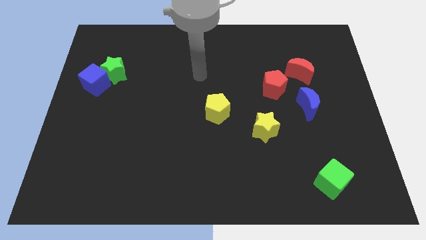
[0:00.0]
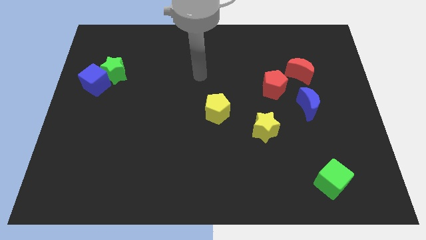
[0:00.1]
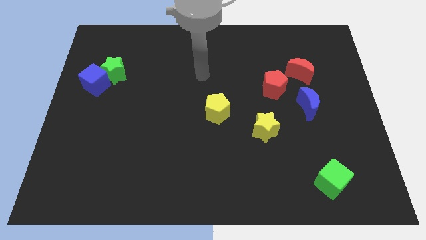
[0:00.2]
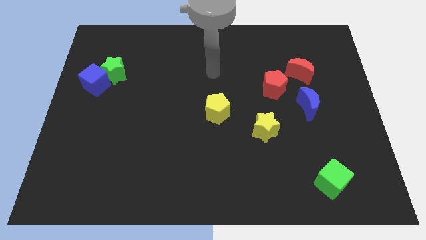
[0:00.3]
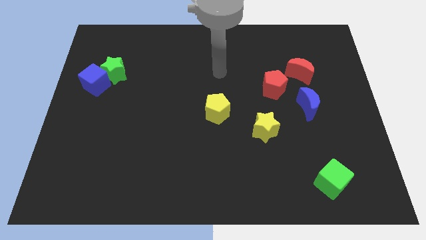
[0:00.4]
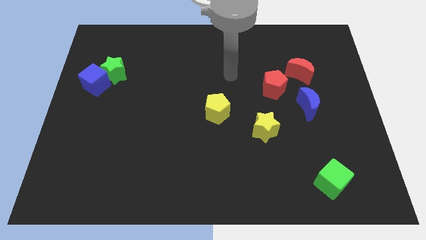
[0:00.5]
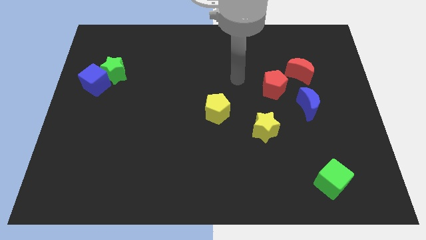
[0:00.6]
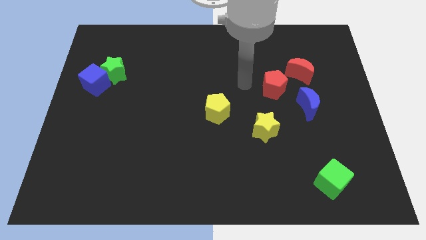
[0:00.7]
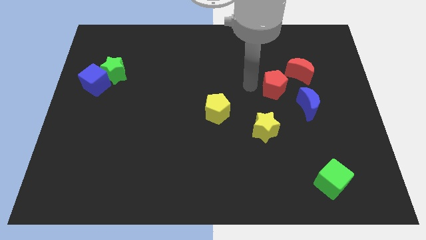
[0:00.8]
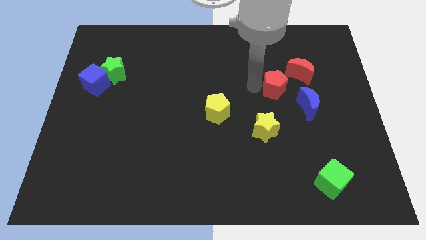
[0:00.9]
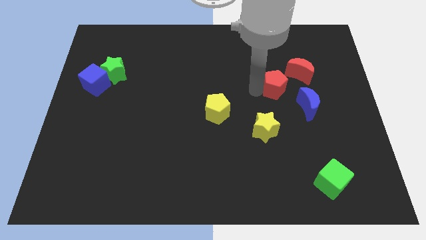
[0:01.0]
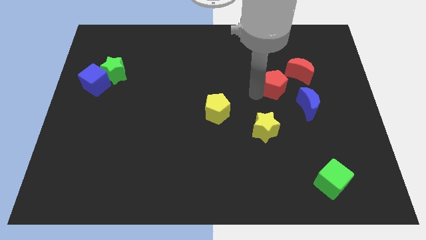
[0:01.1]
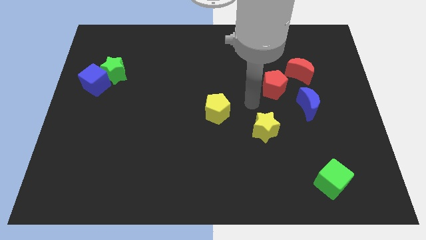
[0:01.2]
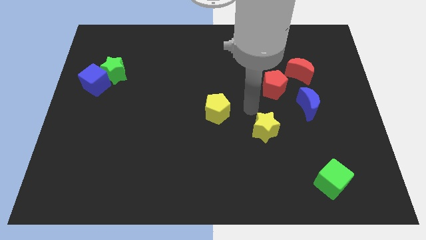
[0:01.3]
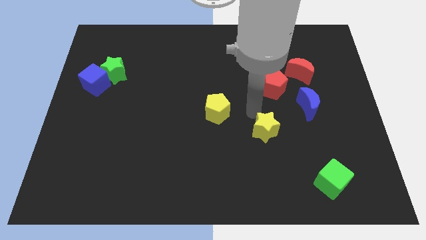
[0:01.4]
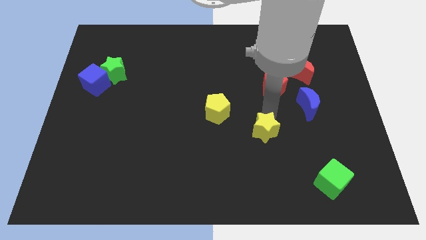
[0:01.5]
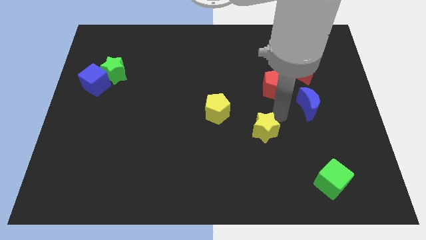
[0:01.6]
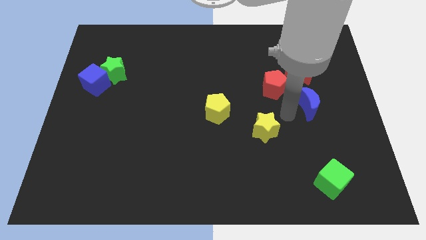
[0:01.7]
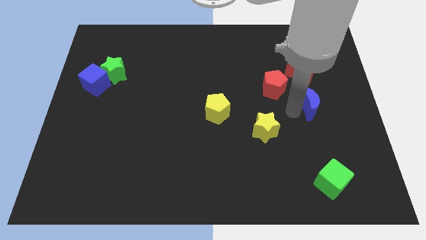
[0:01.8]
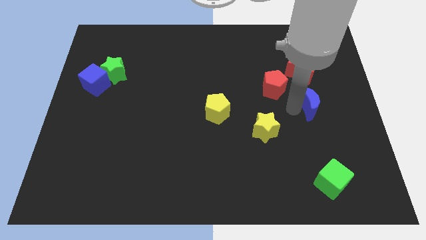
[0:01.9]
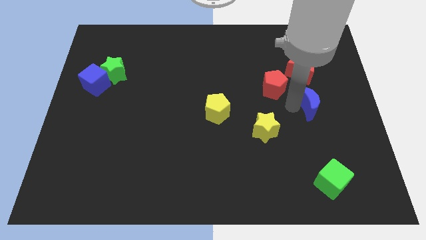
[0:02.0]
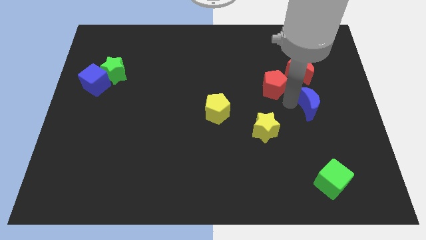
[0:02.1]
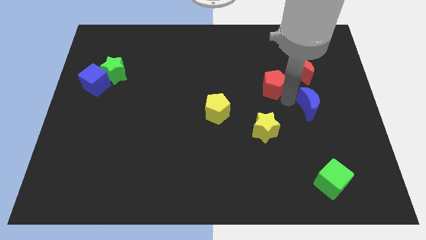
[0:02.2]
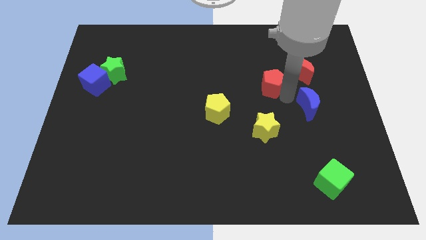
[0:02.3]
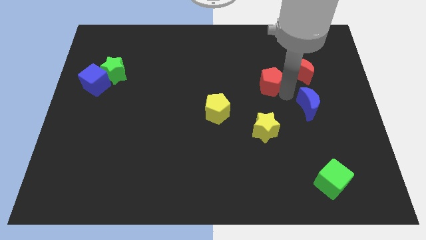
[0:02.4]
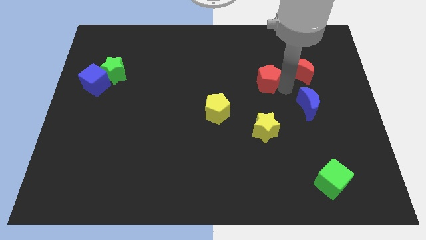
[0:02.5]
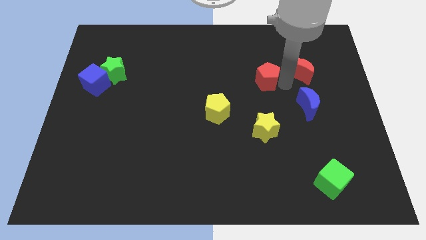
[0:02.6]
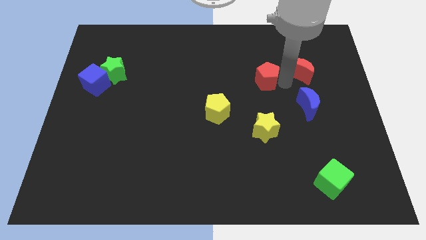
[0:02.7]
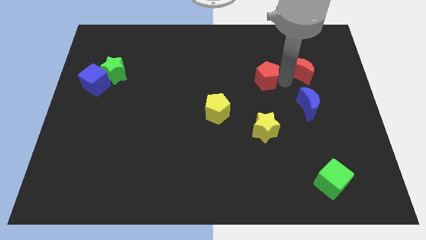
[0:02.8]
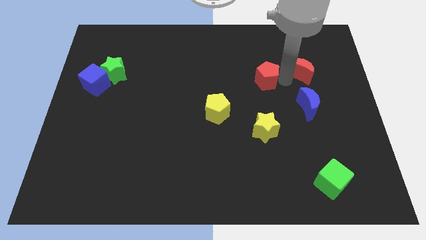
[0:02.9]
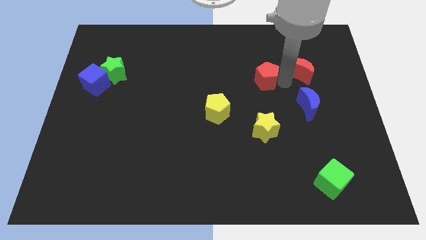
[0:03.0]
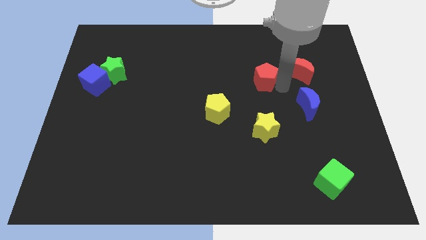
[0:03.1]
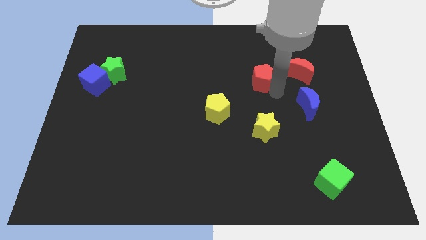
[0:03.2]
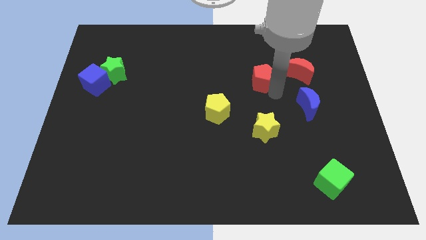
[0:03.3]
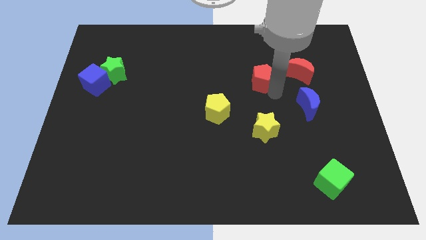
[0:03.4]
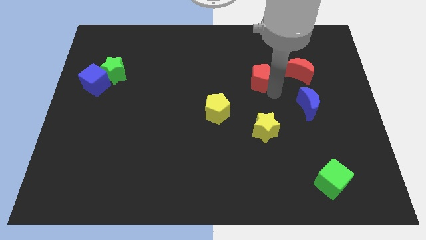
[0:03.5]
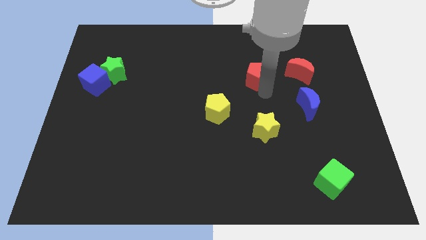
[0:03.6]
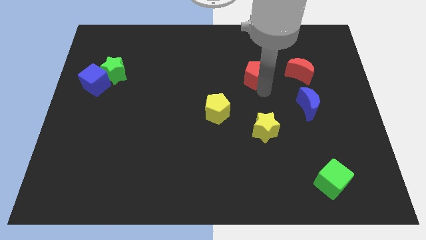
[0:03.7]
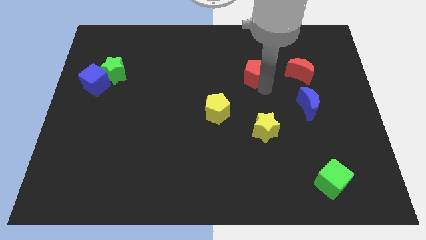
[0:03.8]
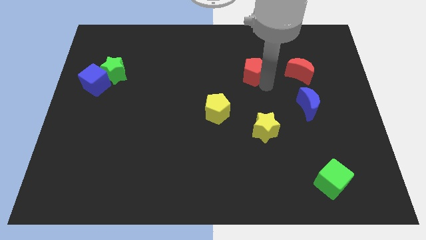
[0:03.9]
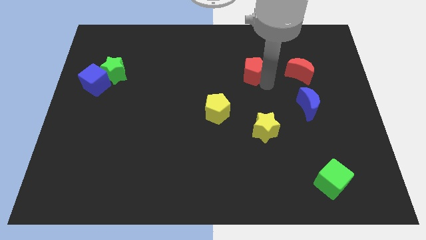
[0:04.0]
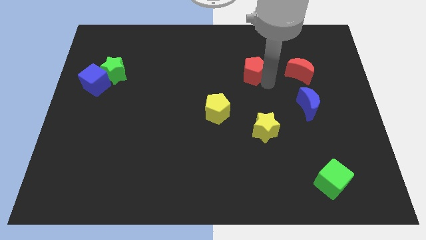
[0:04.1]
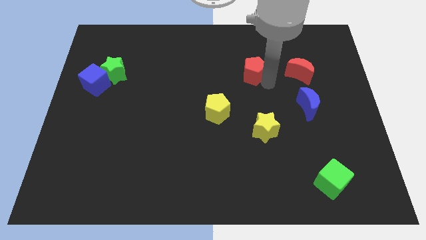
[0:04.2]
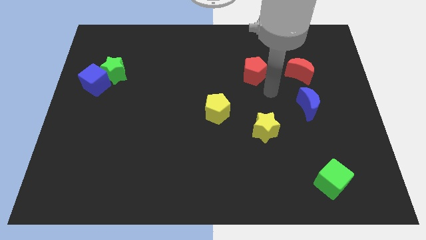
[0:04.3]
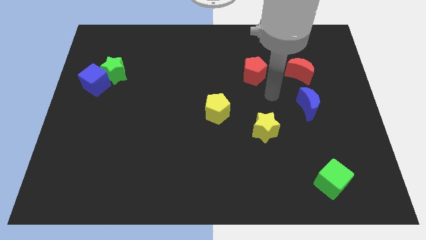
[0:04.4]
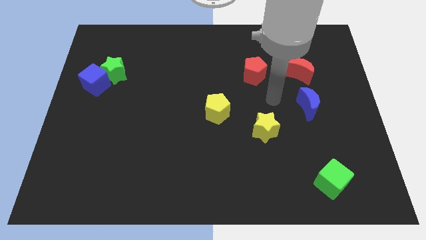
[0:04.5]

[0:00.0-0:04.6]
move the red pentagon left beside the red moon

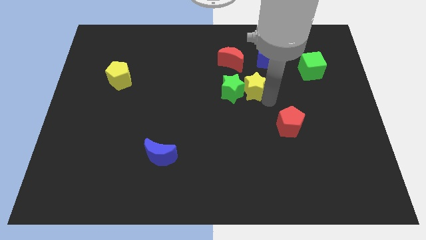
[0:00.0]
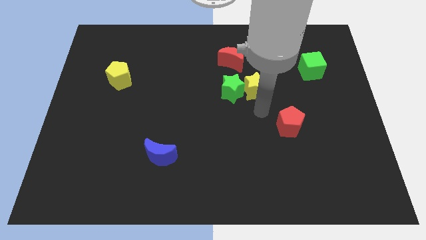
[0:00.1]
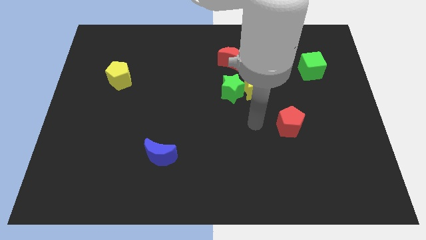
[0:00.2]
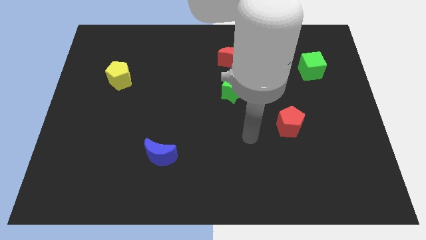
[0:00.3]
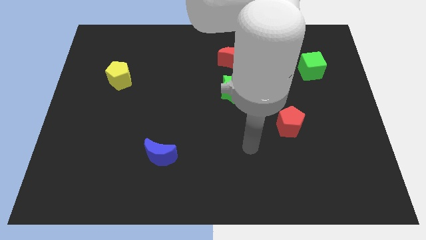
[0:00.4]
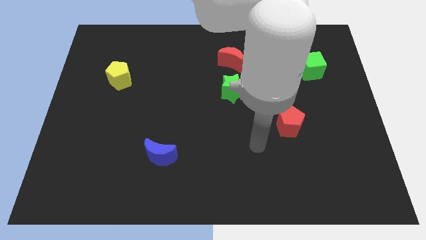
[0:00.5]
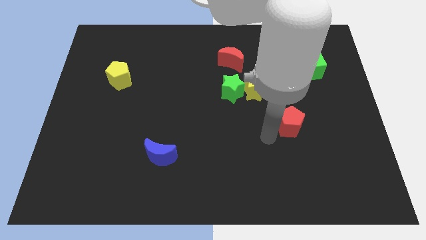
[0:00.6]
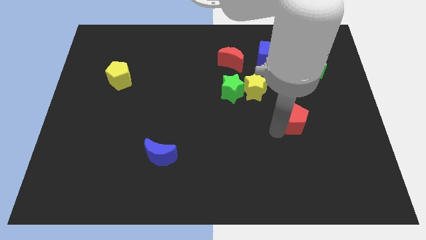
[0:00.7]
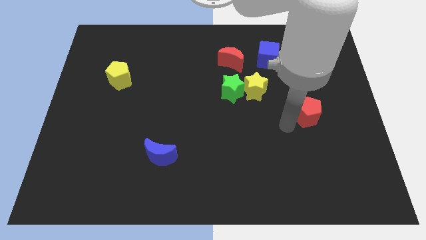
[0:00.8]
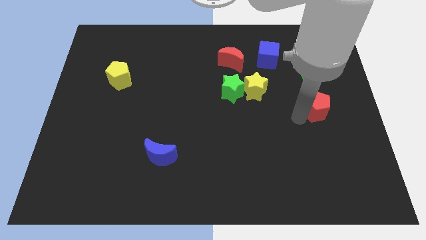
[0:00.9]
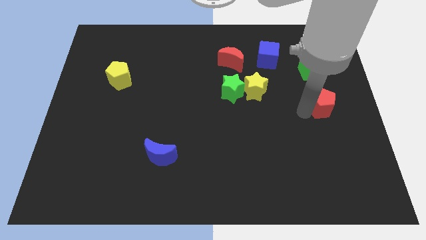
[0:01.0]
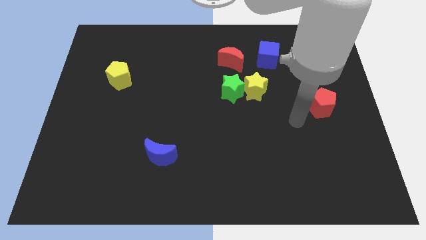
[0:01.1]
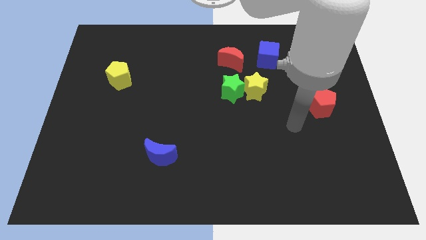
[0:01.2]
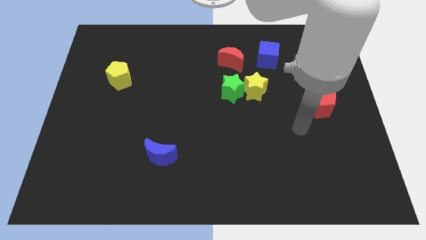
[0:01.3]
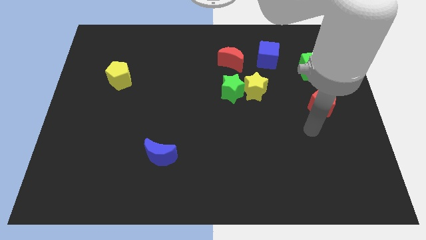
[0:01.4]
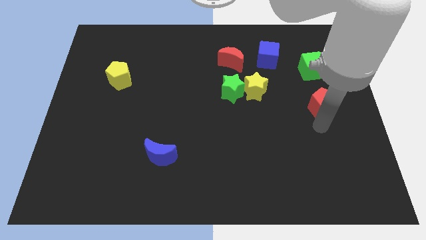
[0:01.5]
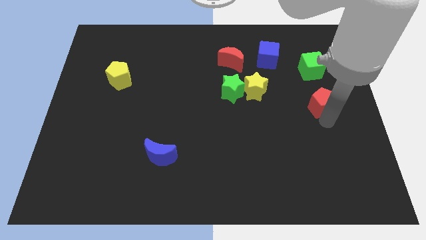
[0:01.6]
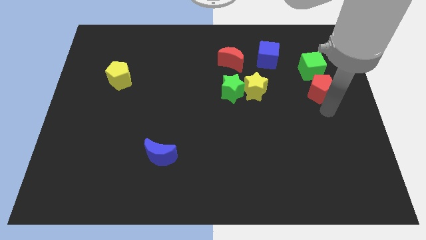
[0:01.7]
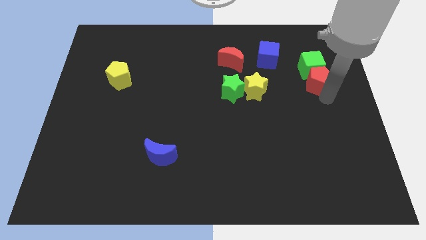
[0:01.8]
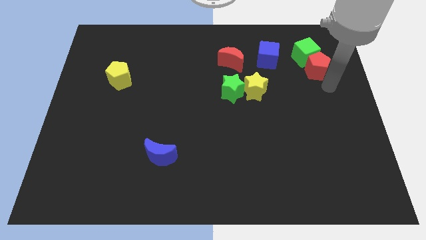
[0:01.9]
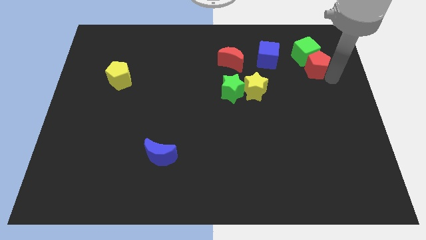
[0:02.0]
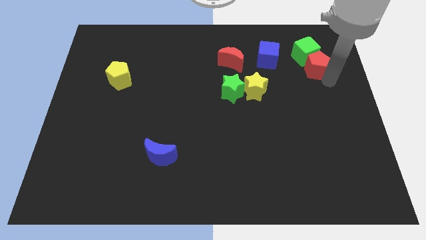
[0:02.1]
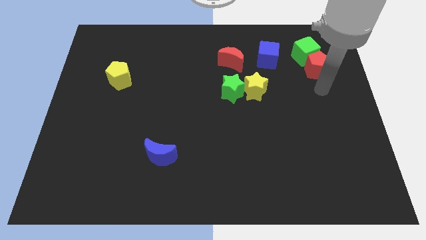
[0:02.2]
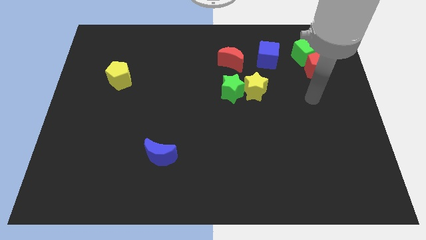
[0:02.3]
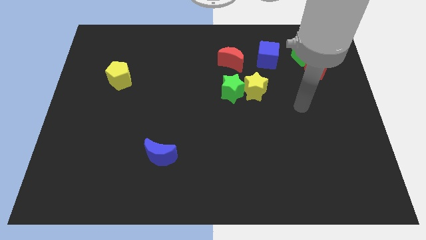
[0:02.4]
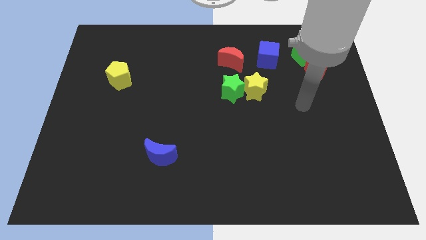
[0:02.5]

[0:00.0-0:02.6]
move the red penatgon into the green cube

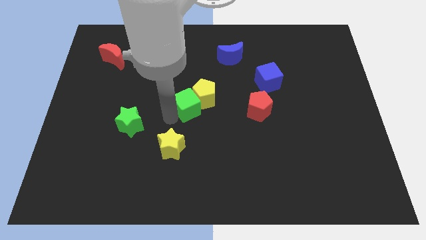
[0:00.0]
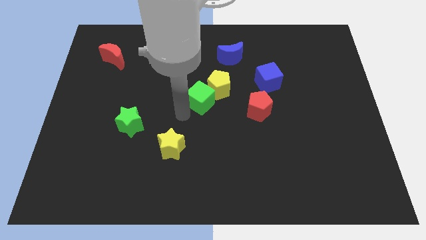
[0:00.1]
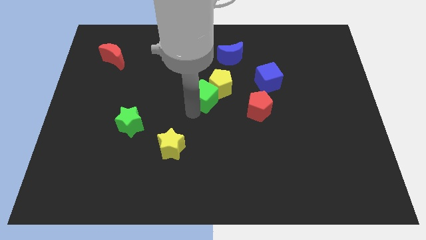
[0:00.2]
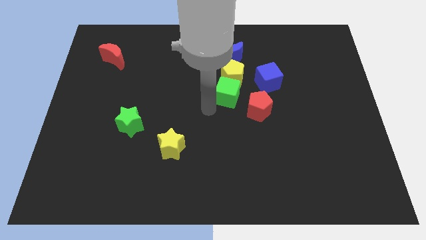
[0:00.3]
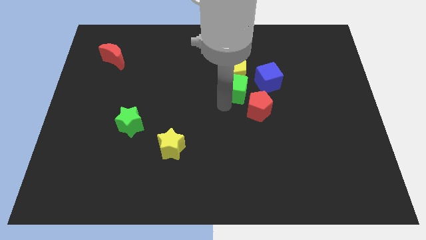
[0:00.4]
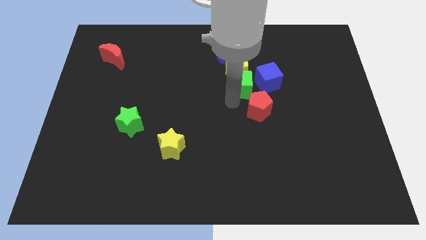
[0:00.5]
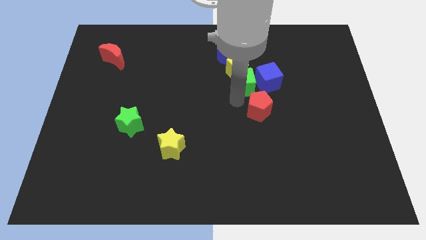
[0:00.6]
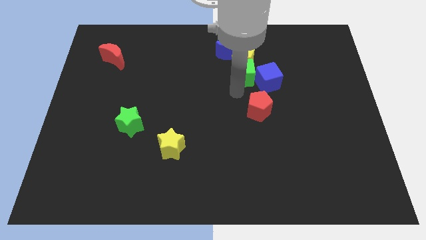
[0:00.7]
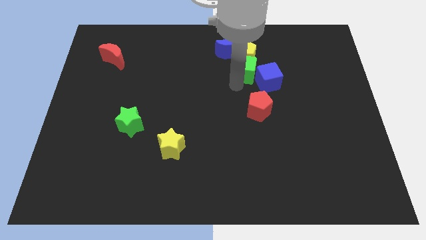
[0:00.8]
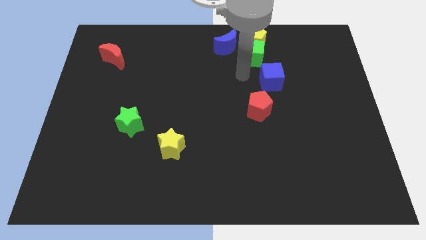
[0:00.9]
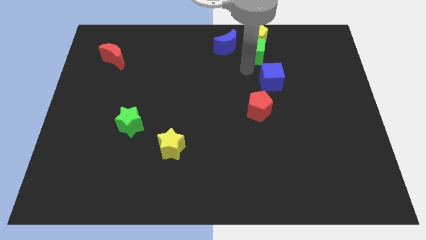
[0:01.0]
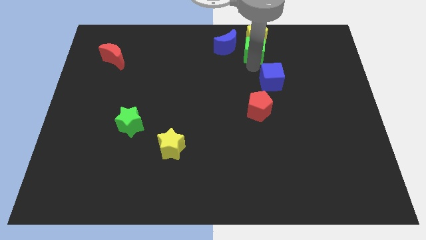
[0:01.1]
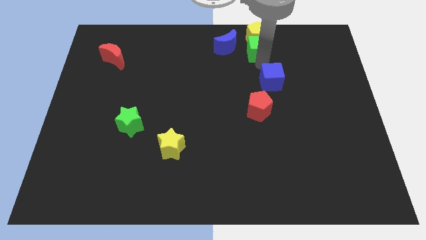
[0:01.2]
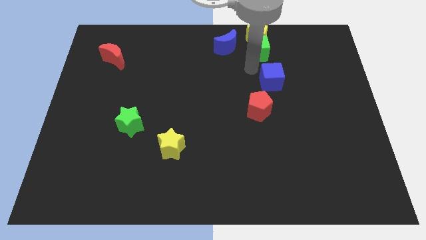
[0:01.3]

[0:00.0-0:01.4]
move green cube and yellow pentagon to the top center of the board

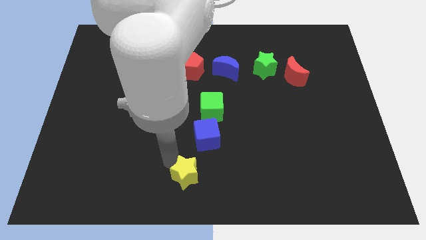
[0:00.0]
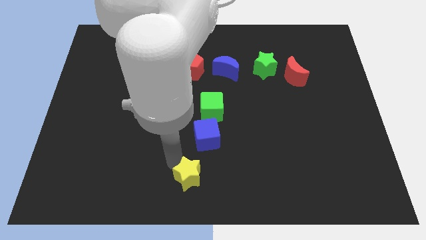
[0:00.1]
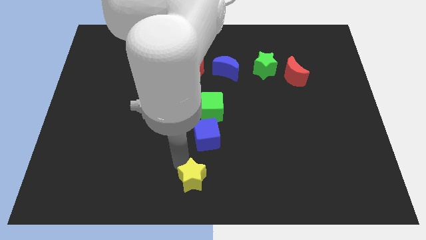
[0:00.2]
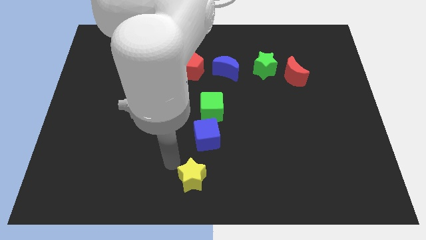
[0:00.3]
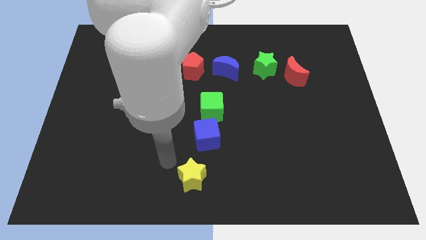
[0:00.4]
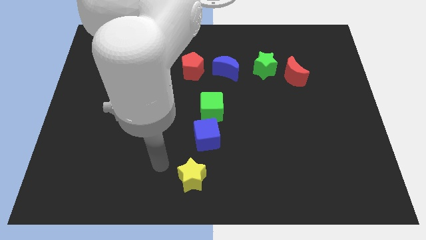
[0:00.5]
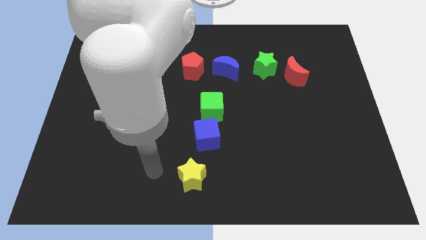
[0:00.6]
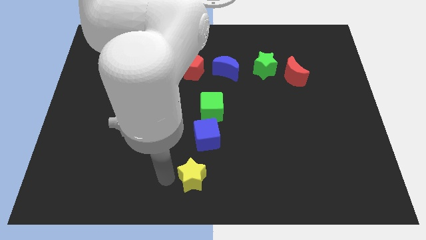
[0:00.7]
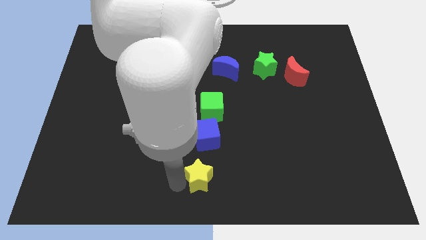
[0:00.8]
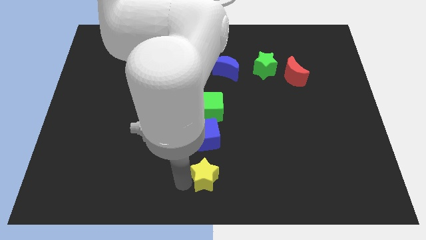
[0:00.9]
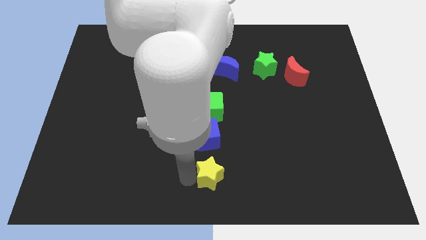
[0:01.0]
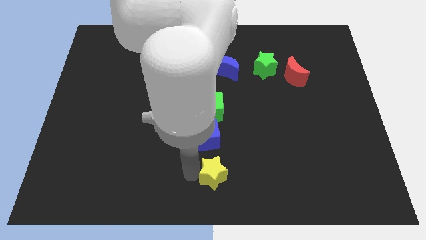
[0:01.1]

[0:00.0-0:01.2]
push the yellow star below the blue cube
